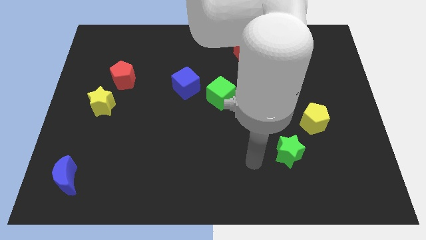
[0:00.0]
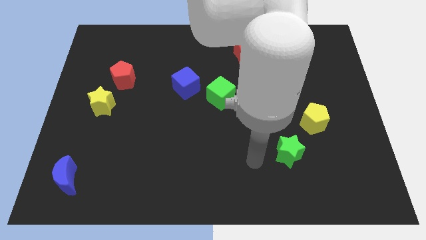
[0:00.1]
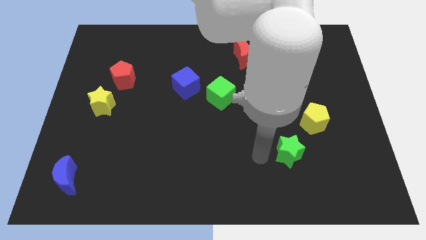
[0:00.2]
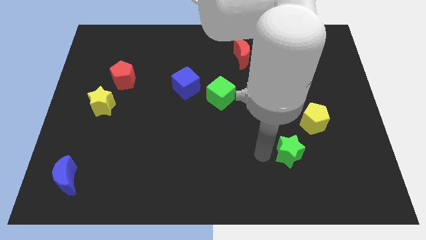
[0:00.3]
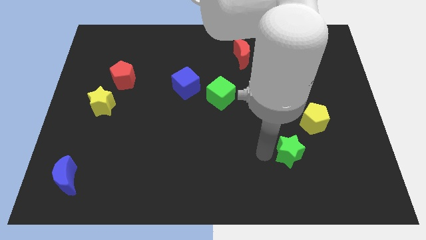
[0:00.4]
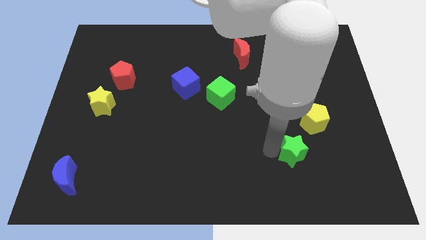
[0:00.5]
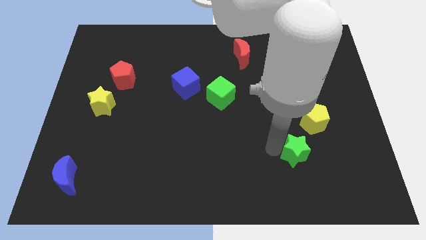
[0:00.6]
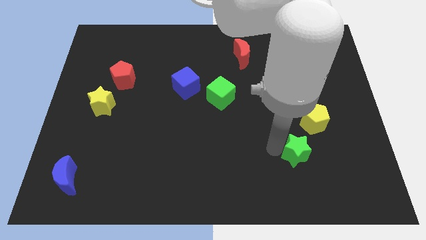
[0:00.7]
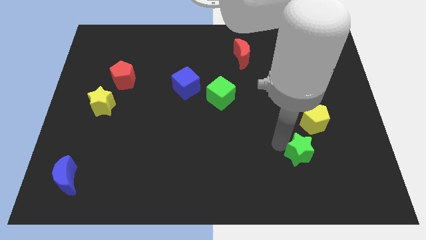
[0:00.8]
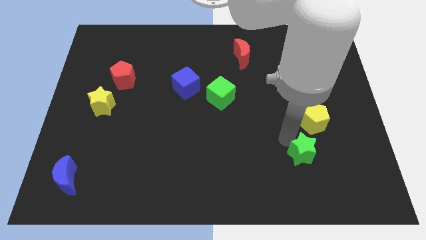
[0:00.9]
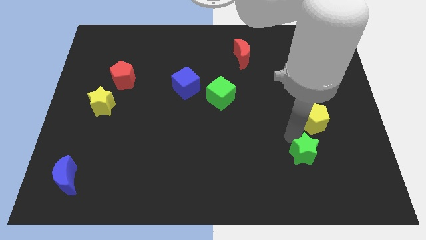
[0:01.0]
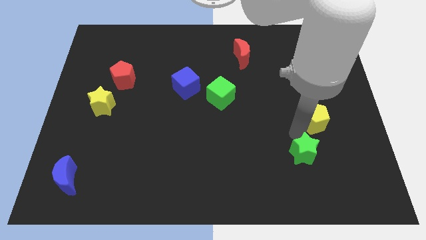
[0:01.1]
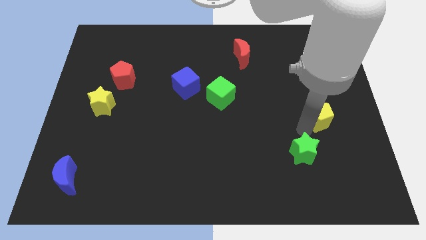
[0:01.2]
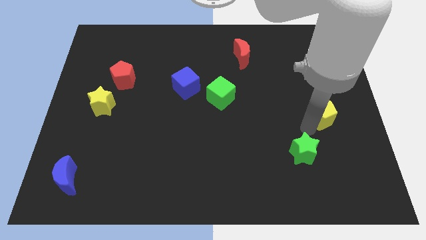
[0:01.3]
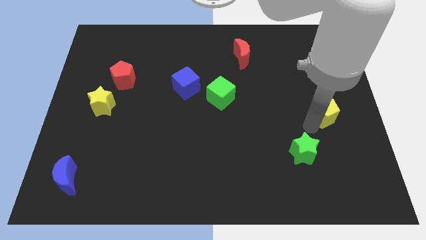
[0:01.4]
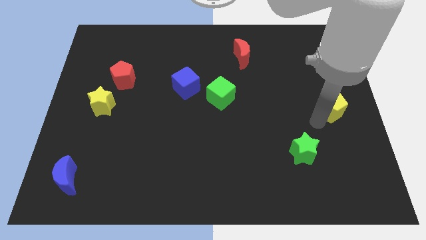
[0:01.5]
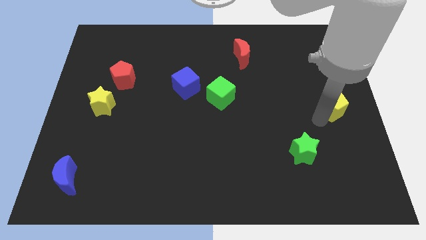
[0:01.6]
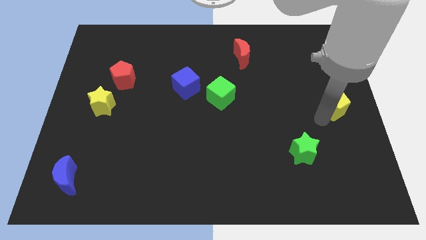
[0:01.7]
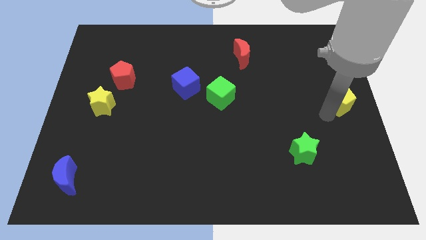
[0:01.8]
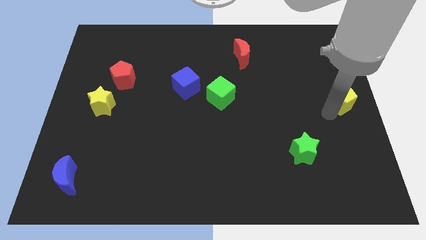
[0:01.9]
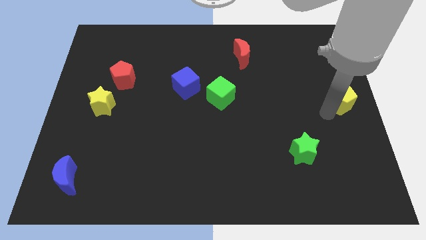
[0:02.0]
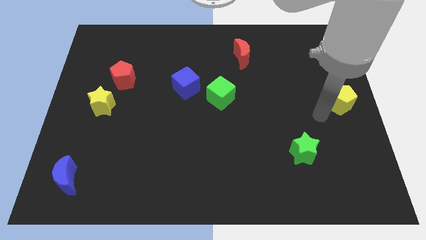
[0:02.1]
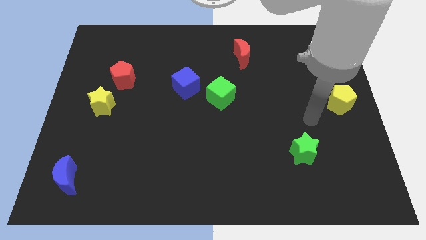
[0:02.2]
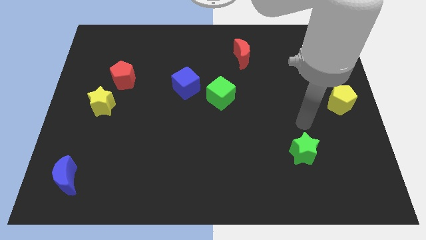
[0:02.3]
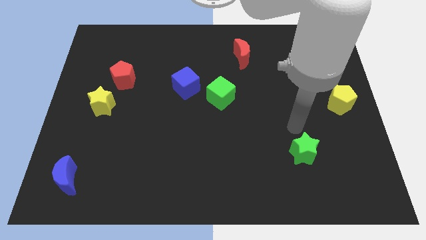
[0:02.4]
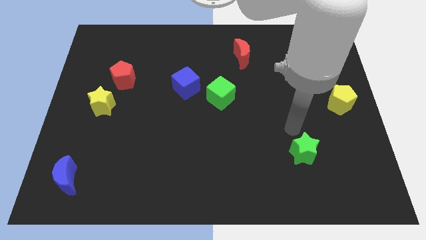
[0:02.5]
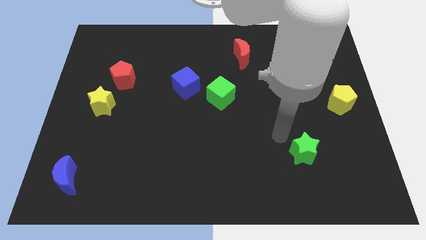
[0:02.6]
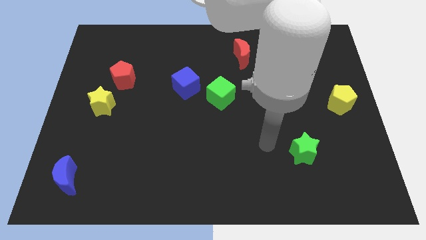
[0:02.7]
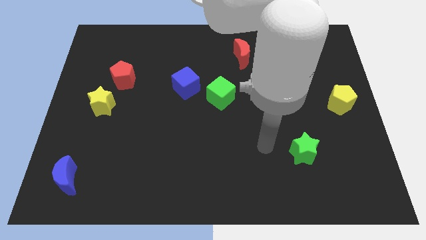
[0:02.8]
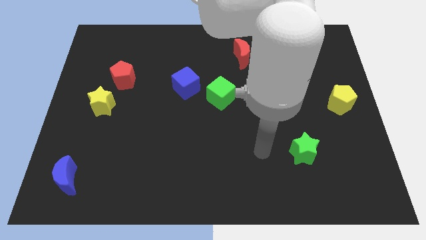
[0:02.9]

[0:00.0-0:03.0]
push the yellow pentagon to the right centre of the board

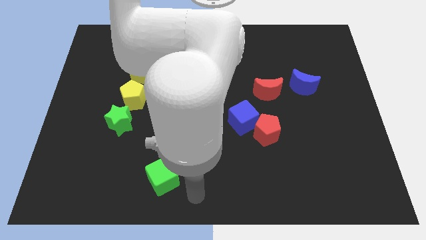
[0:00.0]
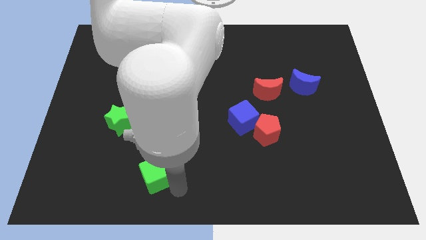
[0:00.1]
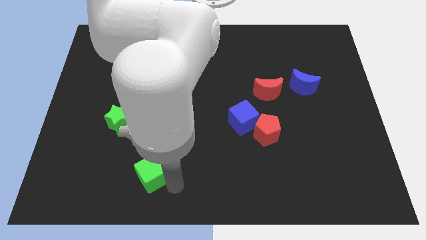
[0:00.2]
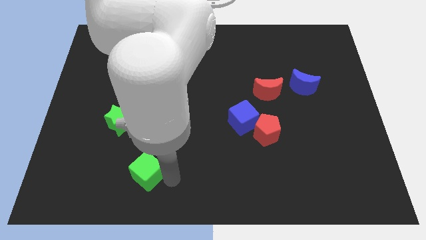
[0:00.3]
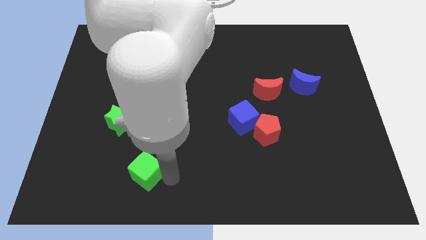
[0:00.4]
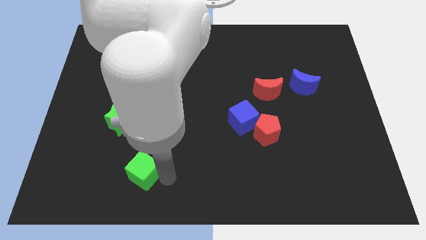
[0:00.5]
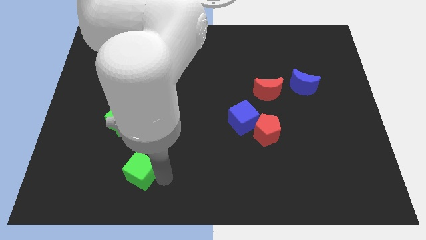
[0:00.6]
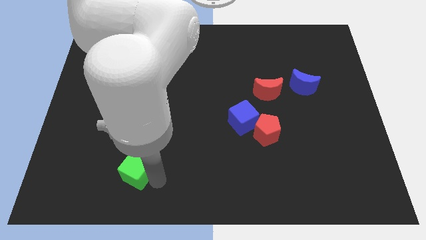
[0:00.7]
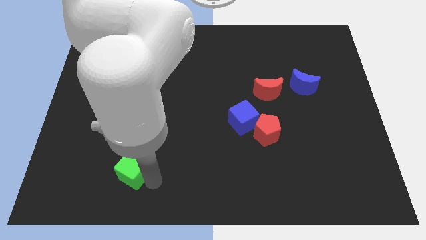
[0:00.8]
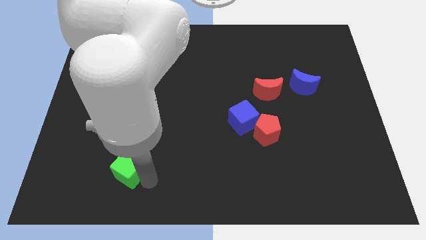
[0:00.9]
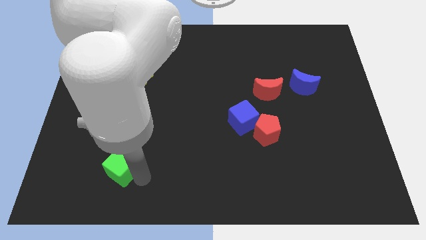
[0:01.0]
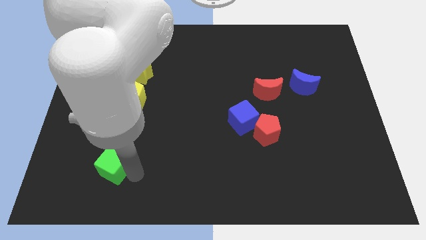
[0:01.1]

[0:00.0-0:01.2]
push the green cube below the green star

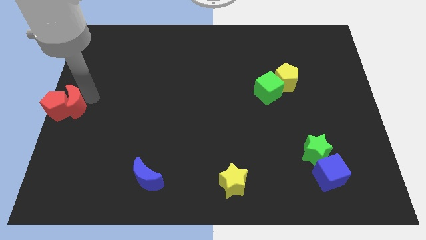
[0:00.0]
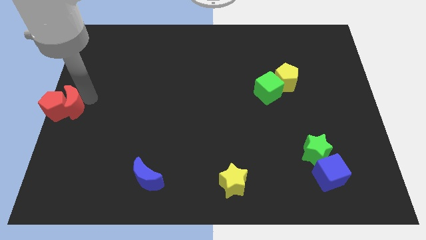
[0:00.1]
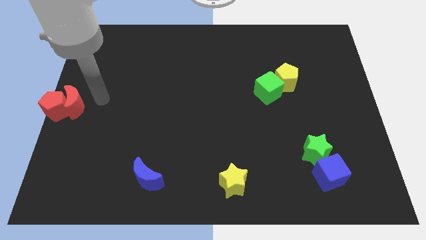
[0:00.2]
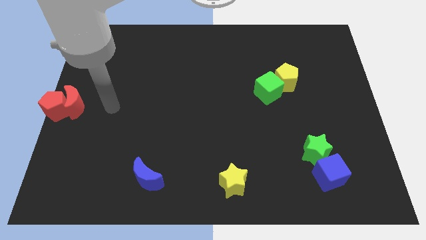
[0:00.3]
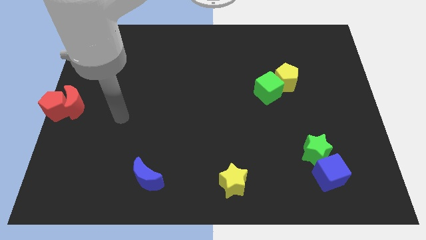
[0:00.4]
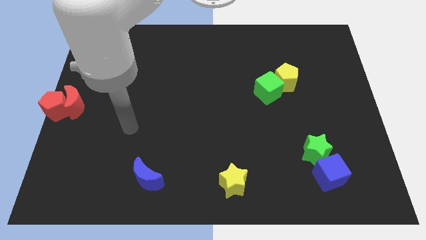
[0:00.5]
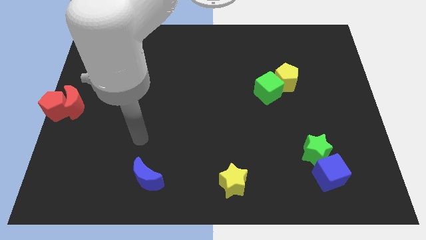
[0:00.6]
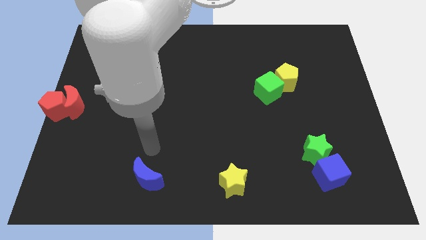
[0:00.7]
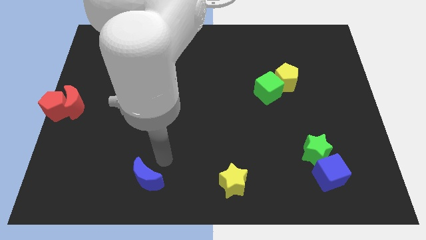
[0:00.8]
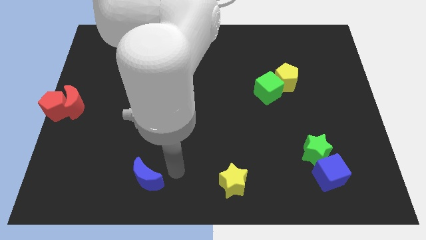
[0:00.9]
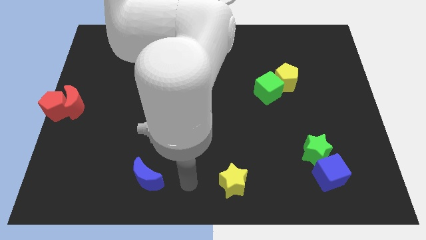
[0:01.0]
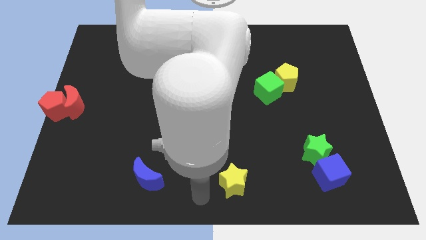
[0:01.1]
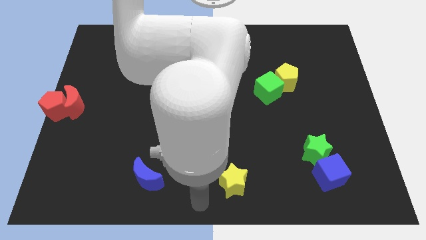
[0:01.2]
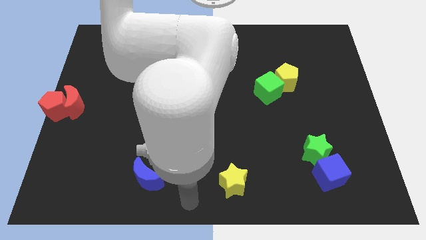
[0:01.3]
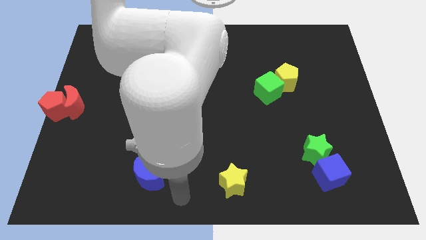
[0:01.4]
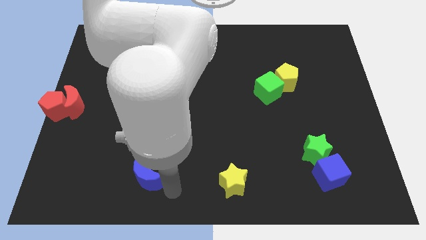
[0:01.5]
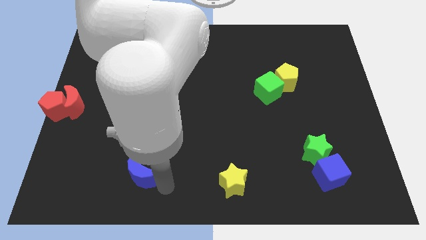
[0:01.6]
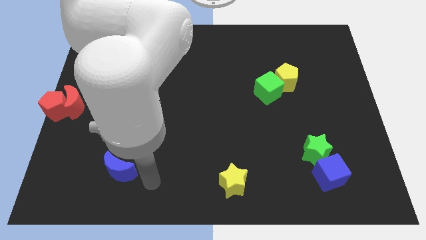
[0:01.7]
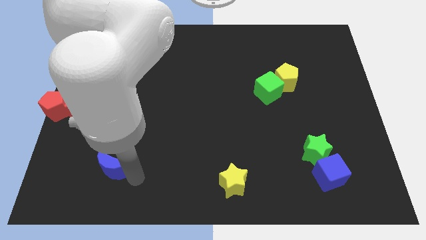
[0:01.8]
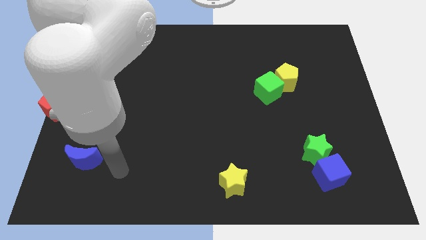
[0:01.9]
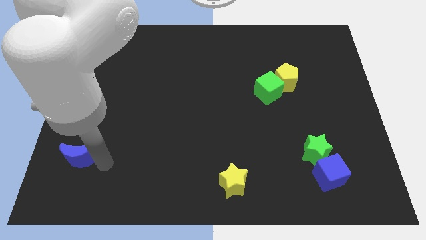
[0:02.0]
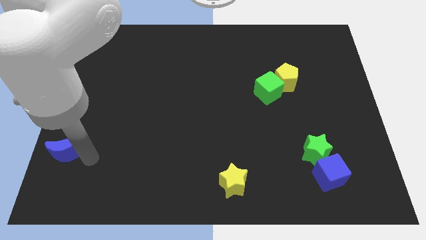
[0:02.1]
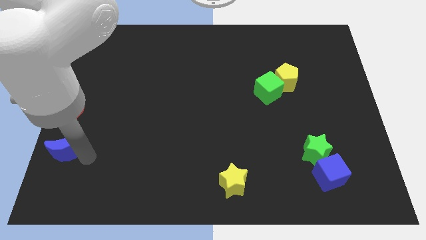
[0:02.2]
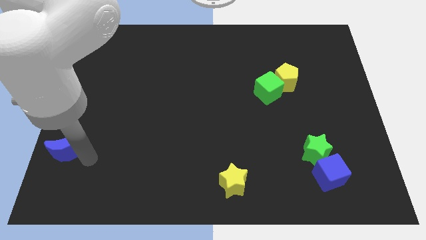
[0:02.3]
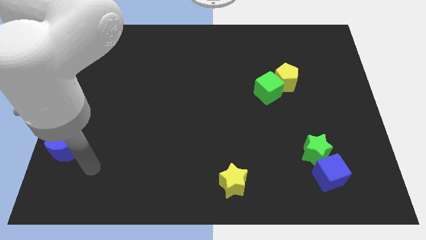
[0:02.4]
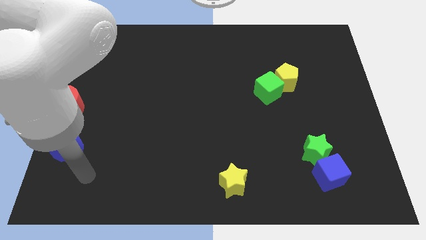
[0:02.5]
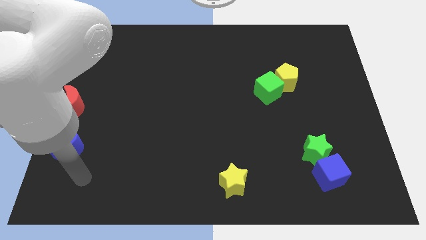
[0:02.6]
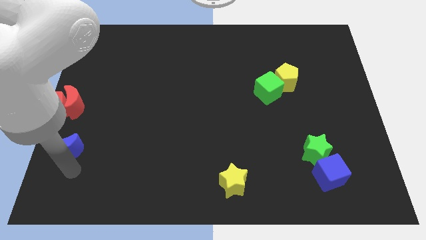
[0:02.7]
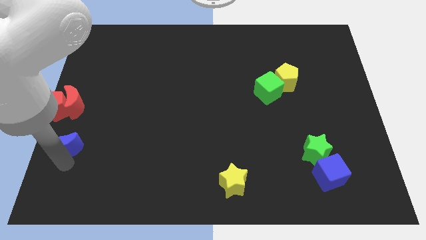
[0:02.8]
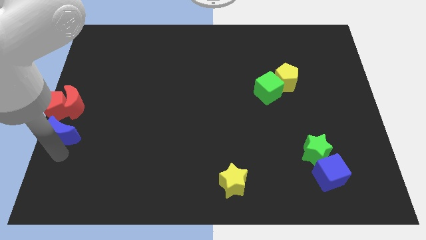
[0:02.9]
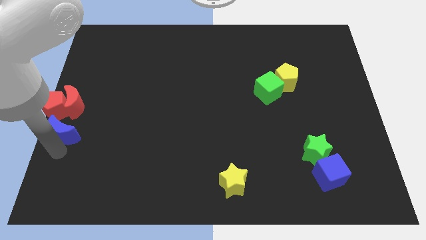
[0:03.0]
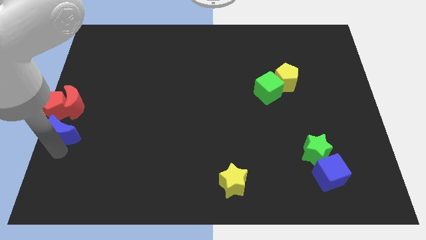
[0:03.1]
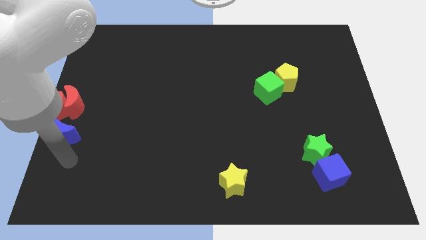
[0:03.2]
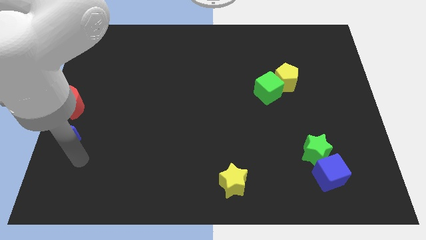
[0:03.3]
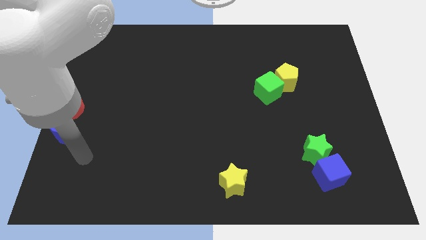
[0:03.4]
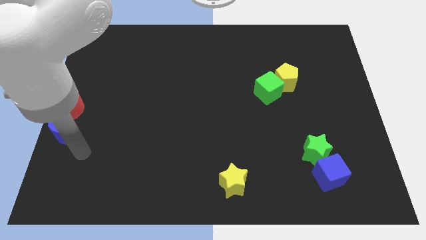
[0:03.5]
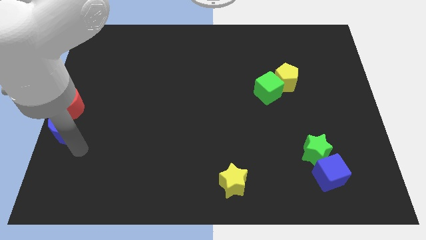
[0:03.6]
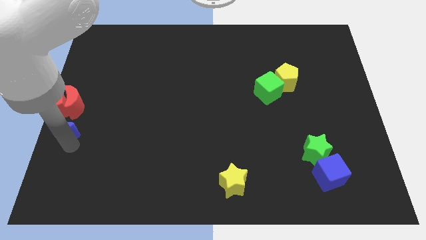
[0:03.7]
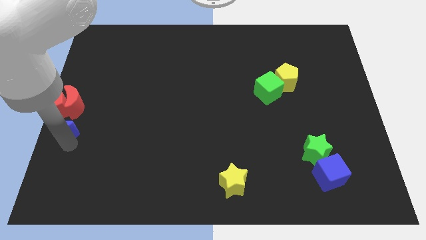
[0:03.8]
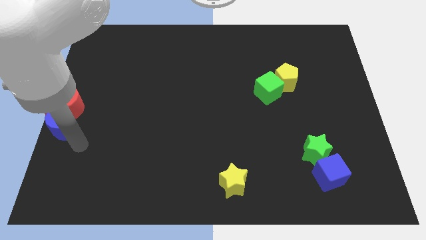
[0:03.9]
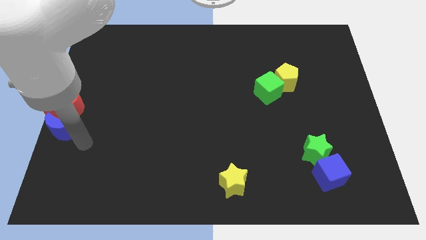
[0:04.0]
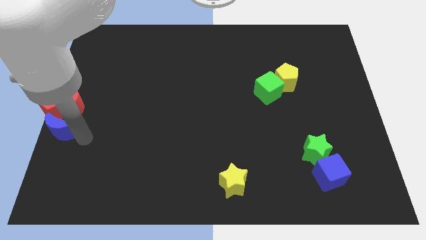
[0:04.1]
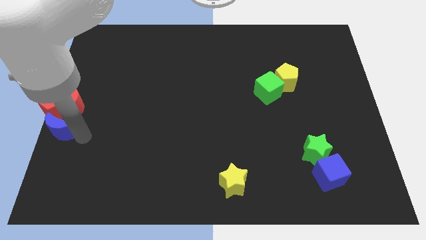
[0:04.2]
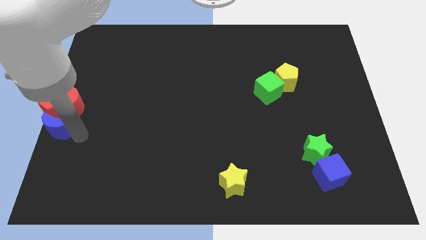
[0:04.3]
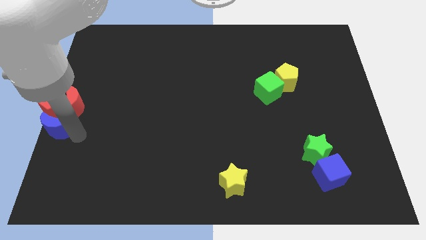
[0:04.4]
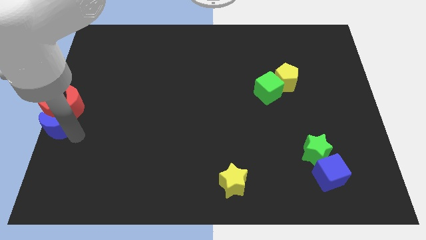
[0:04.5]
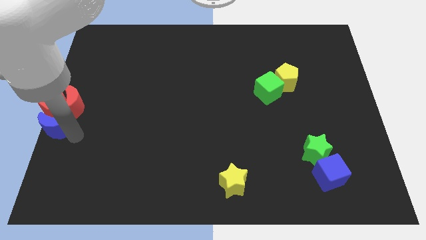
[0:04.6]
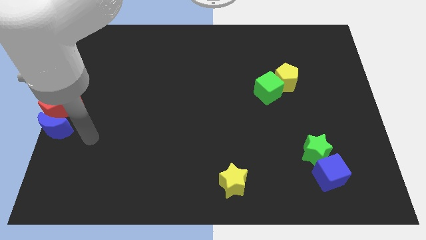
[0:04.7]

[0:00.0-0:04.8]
move the blue moon below the red pentagon

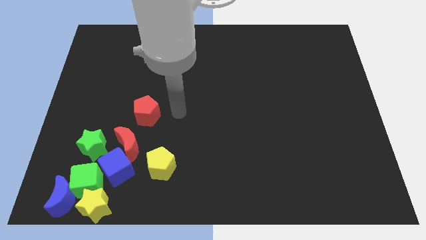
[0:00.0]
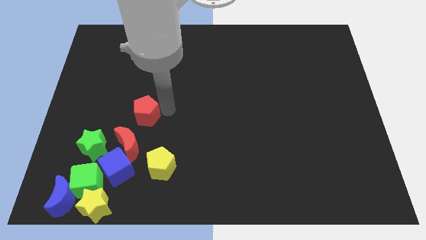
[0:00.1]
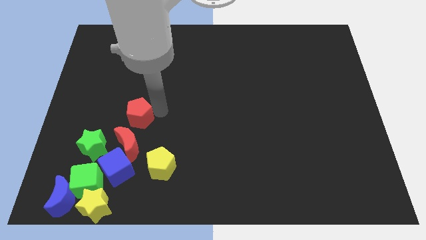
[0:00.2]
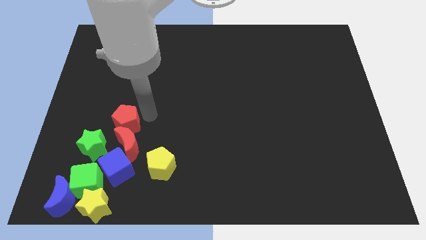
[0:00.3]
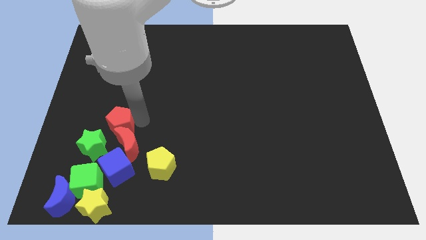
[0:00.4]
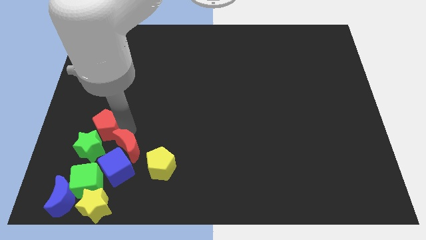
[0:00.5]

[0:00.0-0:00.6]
move the red pentagon into the green star
